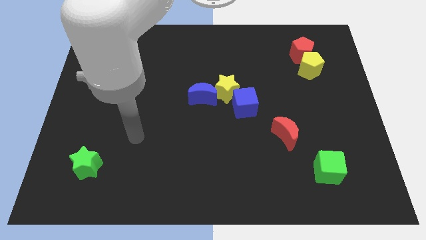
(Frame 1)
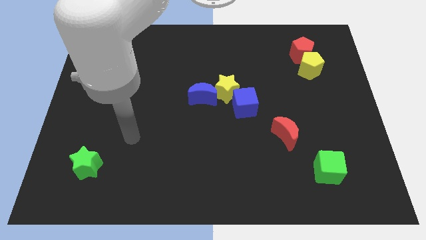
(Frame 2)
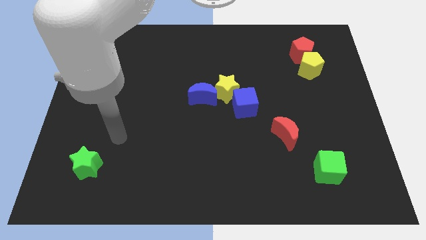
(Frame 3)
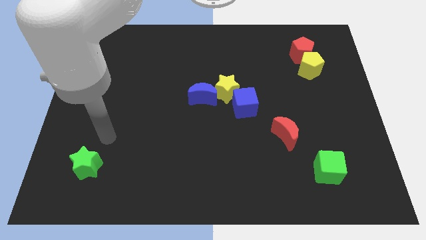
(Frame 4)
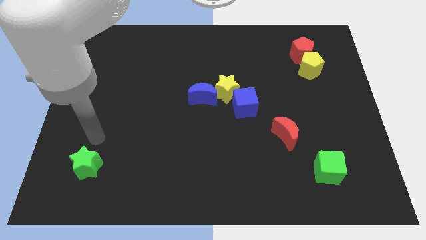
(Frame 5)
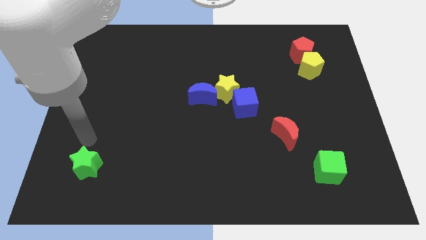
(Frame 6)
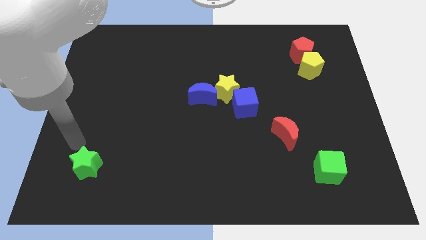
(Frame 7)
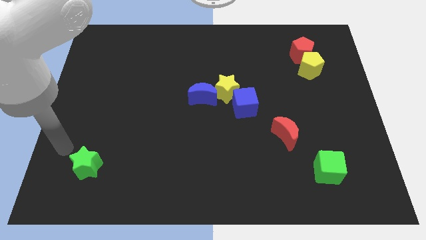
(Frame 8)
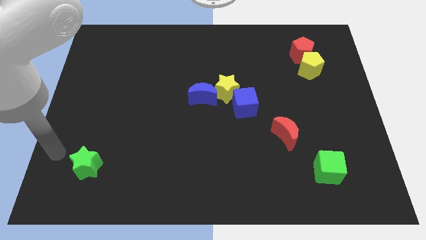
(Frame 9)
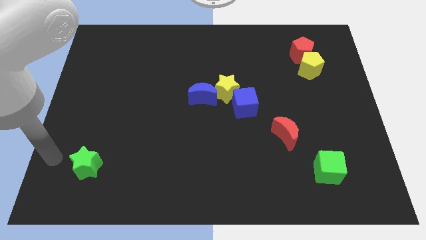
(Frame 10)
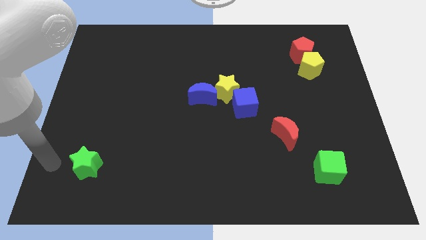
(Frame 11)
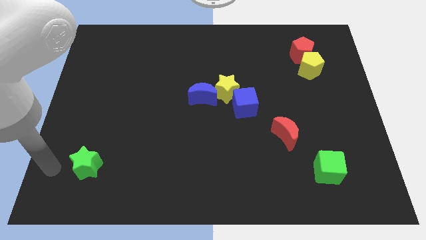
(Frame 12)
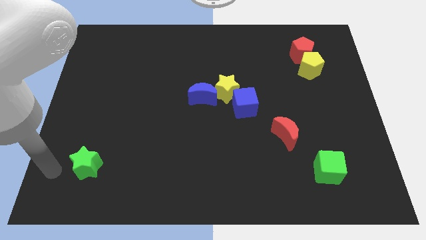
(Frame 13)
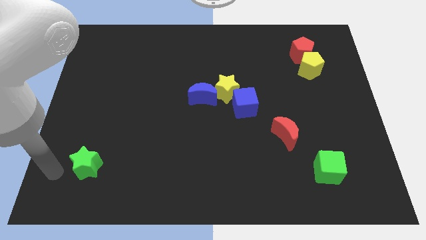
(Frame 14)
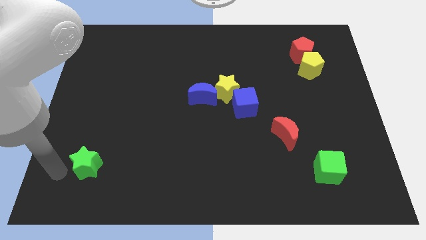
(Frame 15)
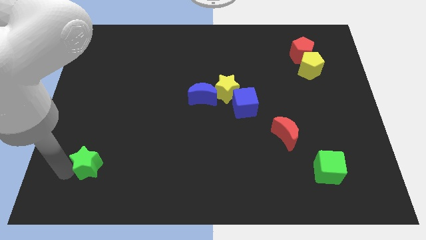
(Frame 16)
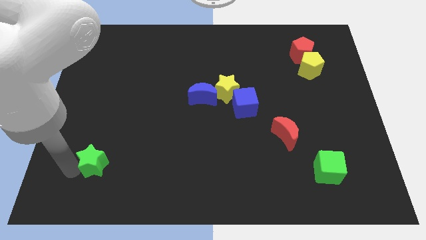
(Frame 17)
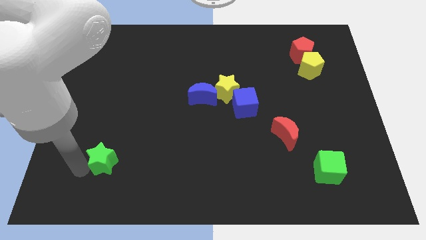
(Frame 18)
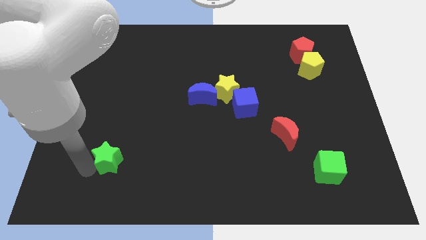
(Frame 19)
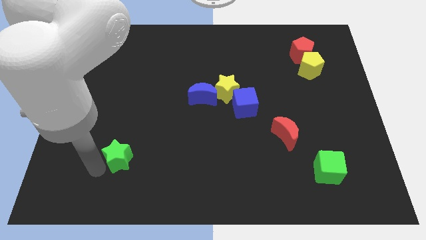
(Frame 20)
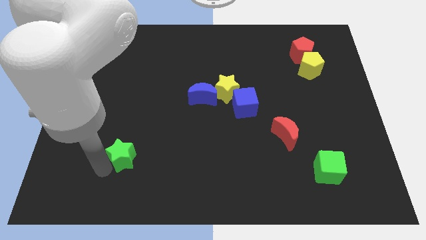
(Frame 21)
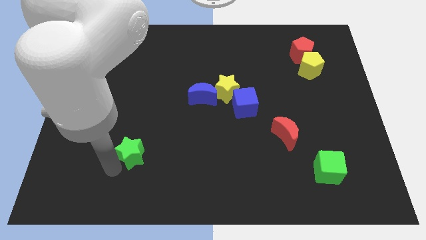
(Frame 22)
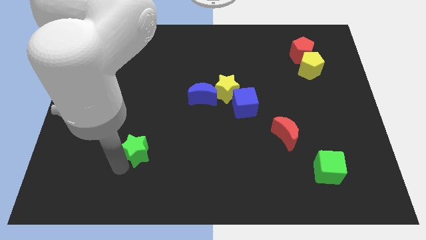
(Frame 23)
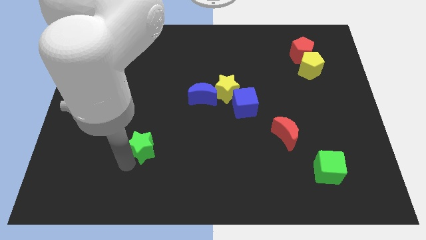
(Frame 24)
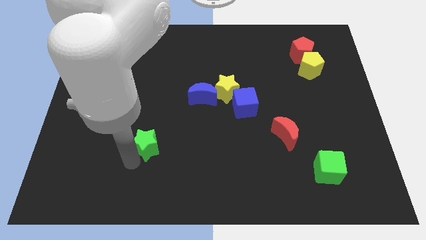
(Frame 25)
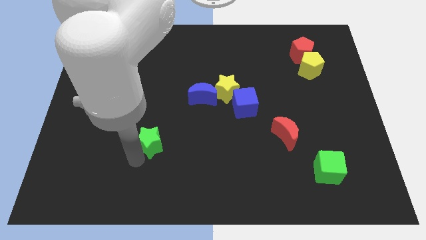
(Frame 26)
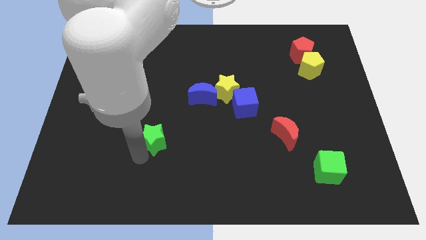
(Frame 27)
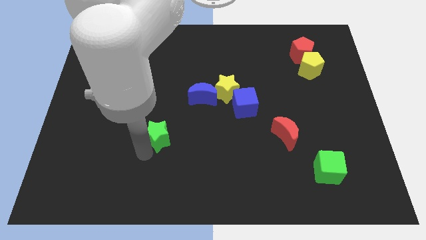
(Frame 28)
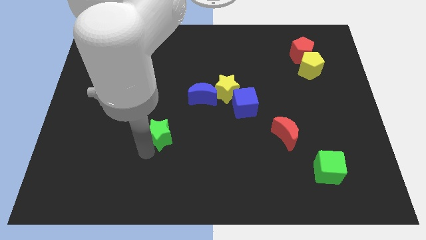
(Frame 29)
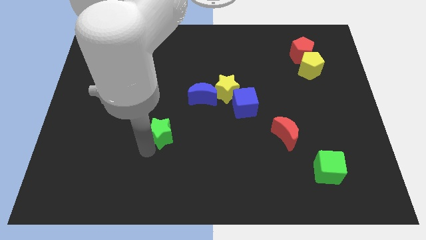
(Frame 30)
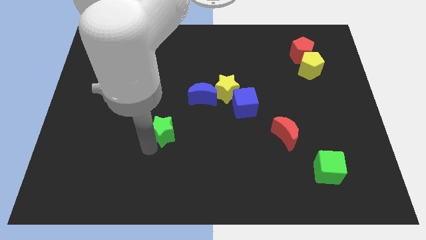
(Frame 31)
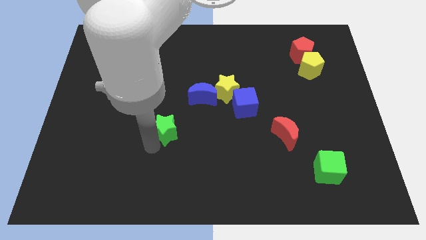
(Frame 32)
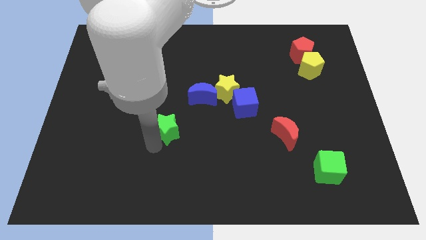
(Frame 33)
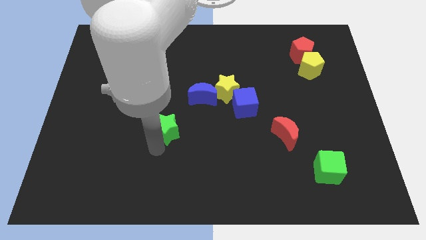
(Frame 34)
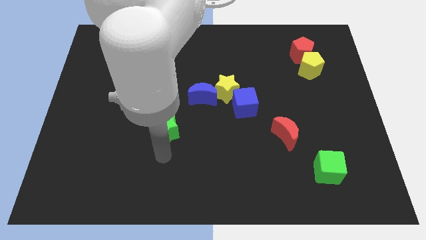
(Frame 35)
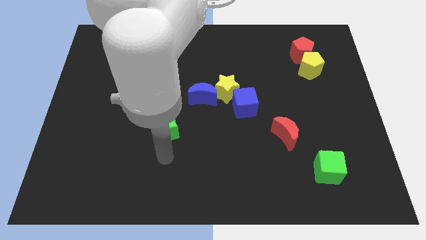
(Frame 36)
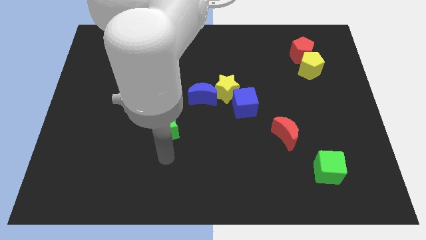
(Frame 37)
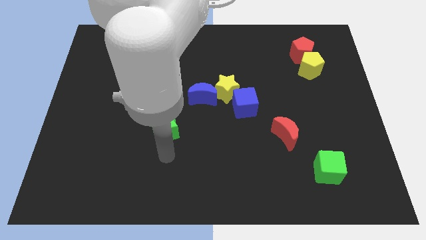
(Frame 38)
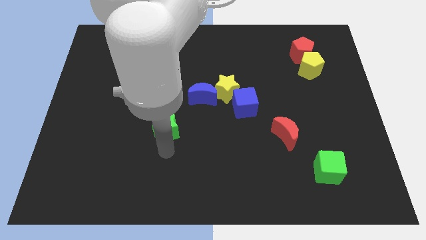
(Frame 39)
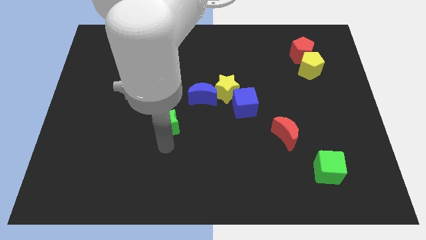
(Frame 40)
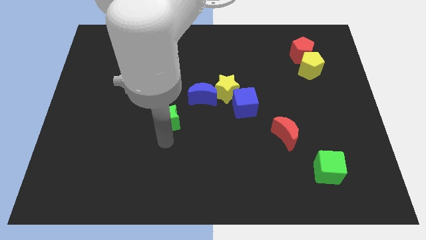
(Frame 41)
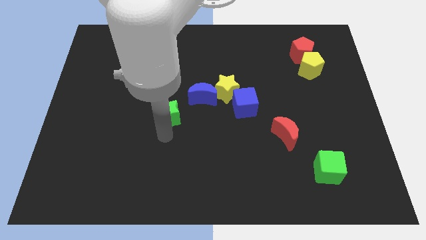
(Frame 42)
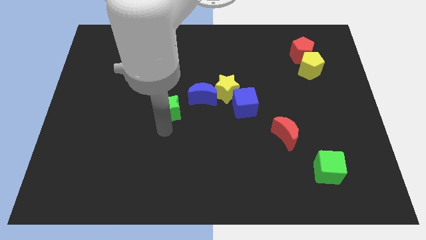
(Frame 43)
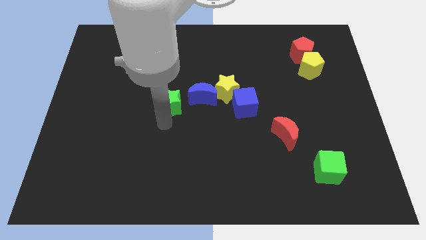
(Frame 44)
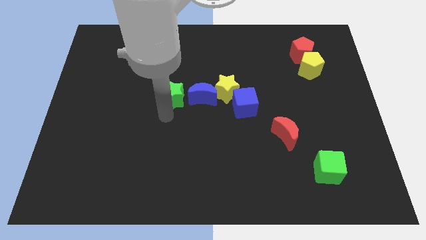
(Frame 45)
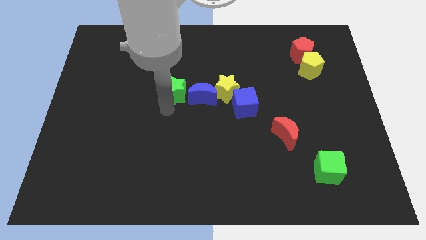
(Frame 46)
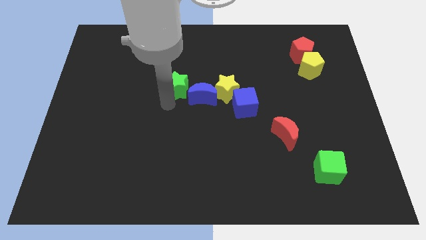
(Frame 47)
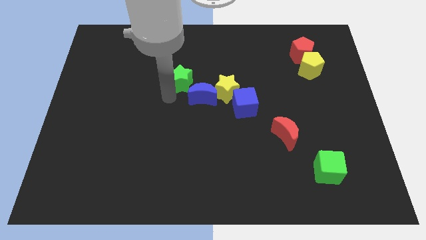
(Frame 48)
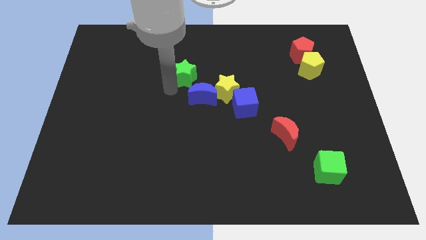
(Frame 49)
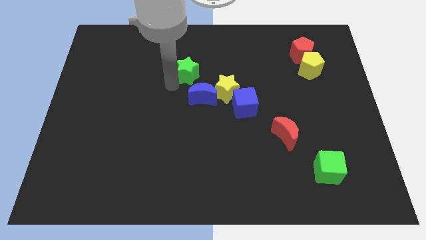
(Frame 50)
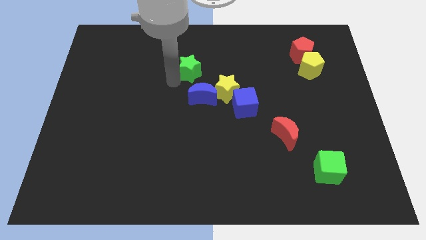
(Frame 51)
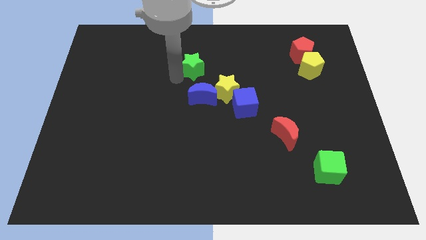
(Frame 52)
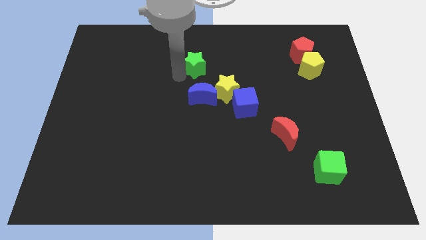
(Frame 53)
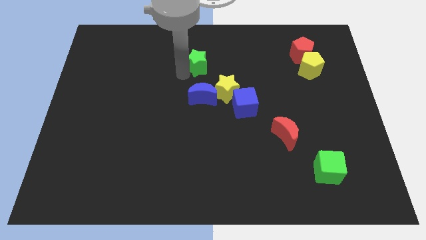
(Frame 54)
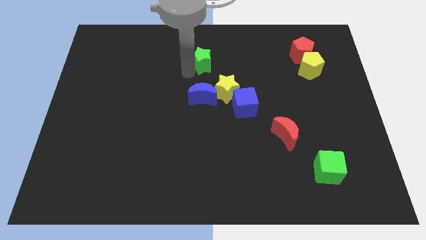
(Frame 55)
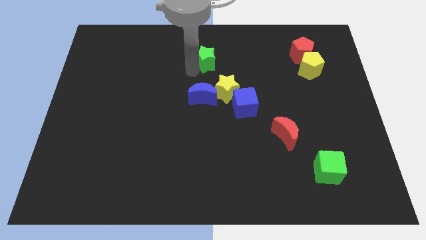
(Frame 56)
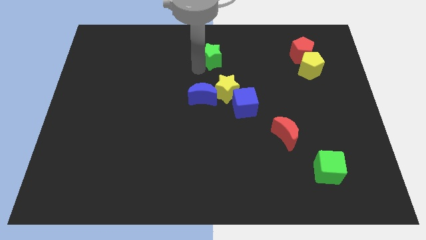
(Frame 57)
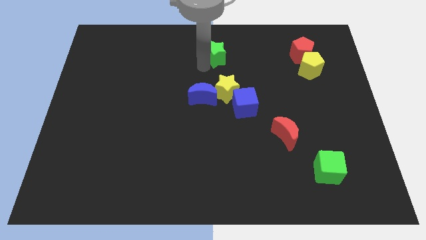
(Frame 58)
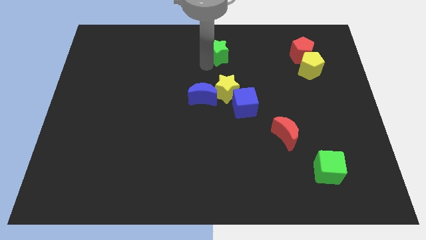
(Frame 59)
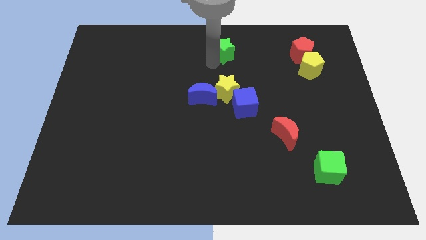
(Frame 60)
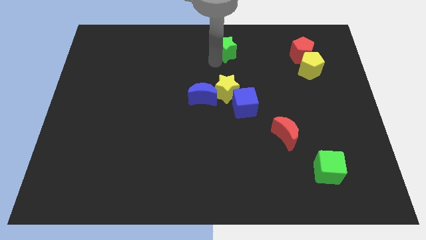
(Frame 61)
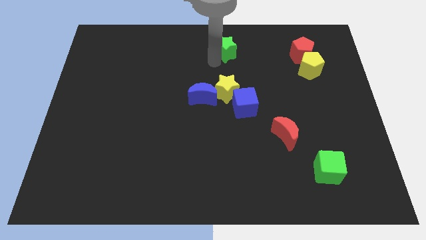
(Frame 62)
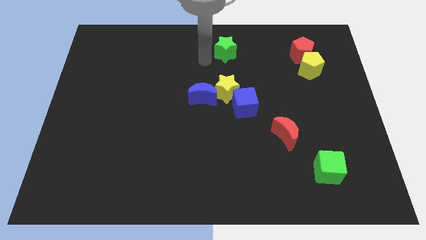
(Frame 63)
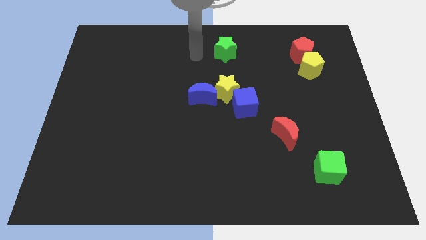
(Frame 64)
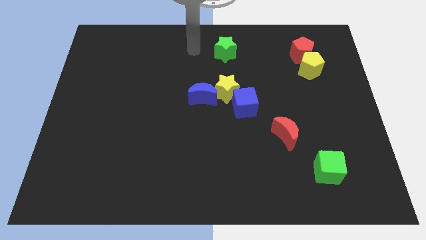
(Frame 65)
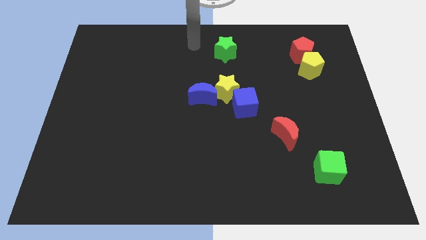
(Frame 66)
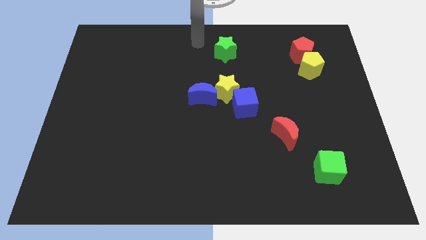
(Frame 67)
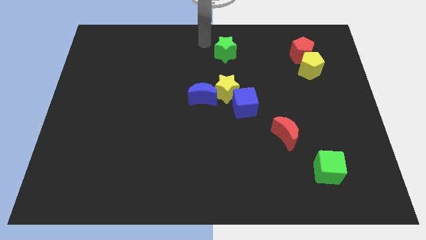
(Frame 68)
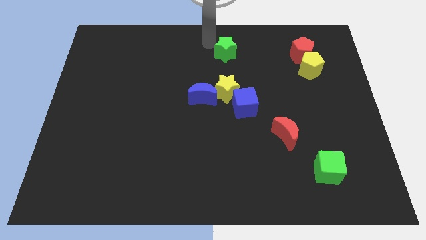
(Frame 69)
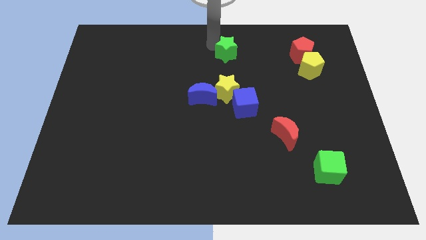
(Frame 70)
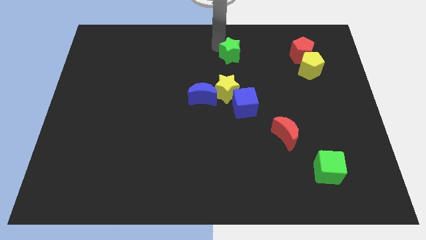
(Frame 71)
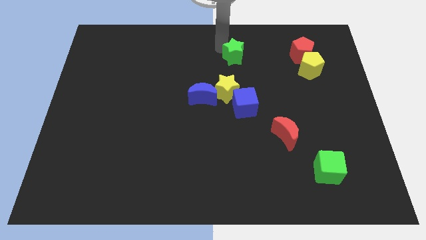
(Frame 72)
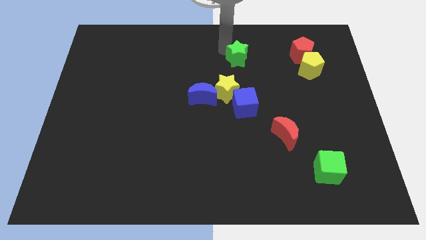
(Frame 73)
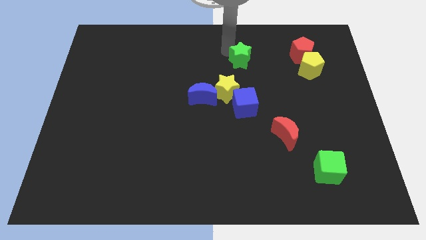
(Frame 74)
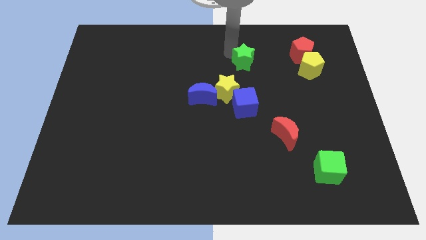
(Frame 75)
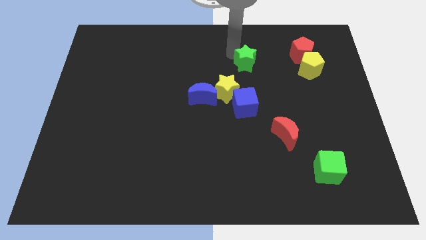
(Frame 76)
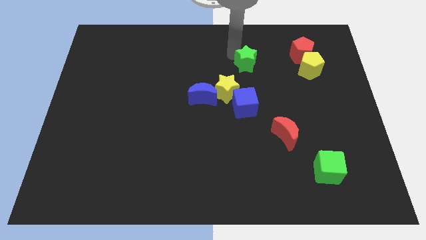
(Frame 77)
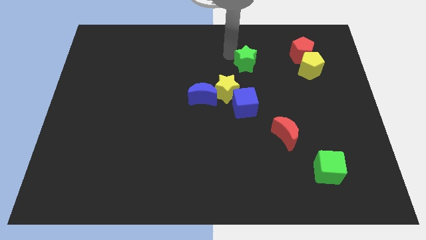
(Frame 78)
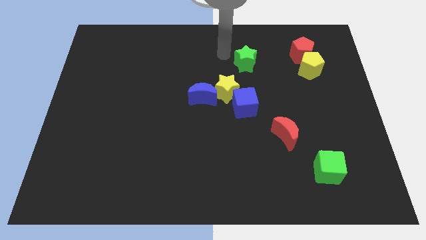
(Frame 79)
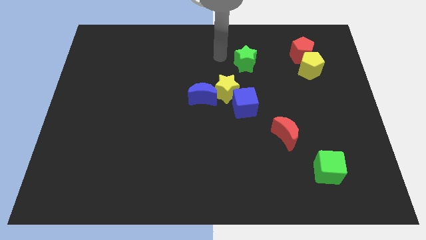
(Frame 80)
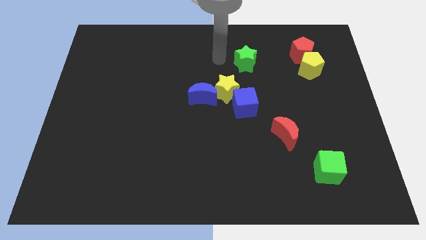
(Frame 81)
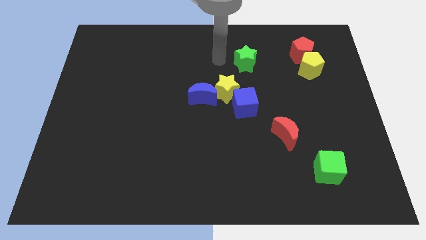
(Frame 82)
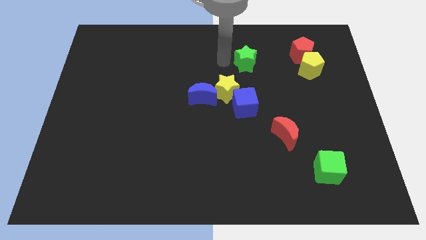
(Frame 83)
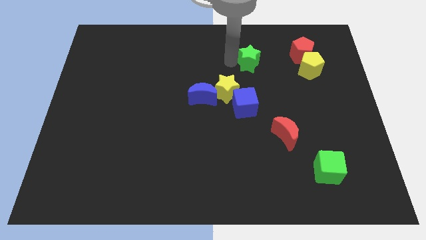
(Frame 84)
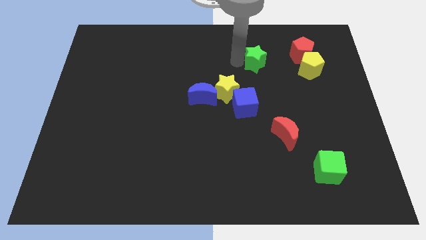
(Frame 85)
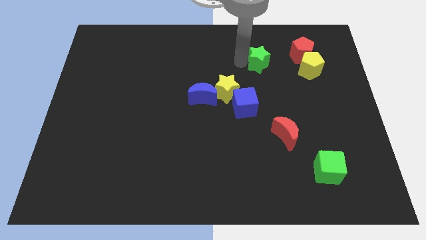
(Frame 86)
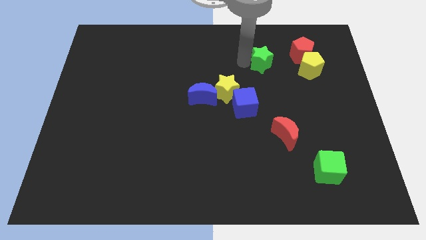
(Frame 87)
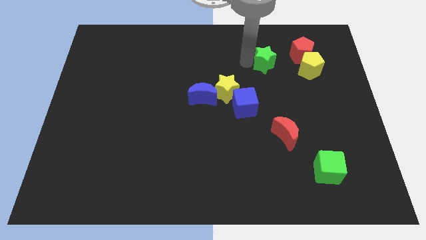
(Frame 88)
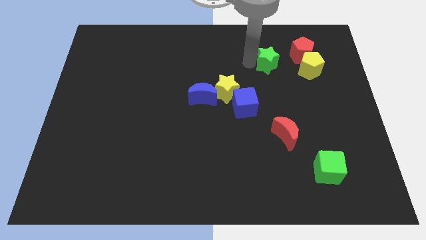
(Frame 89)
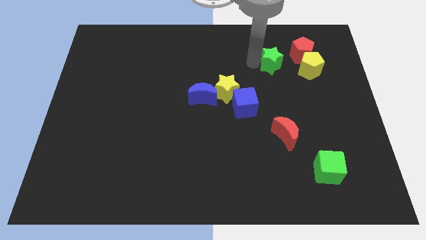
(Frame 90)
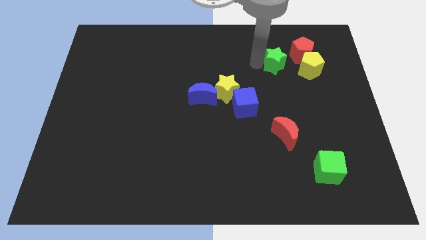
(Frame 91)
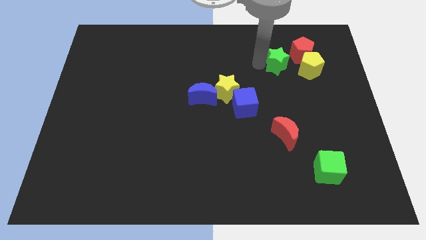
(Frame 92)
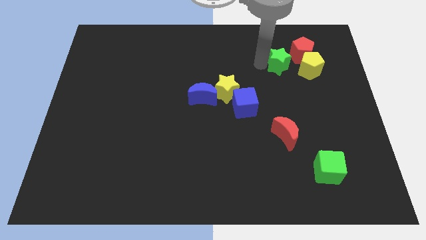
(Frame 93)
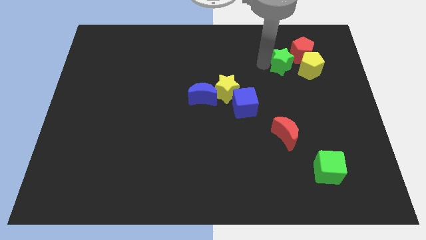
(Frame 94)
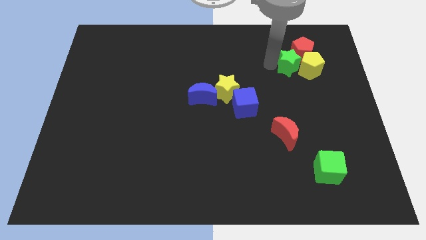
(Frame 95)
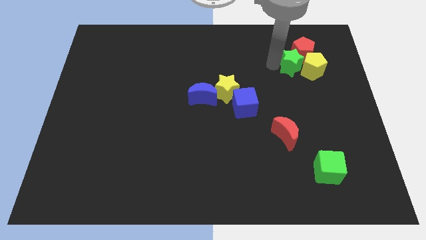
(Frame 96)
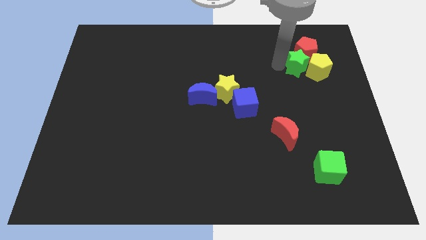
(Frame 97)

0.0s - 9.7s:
slide the green star close to the yellow pentagon
